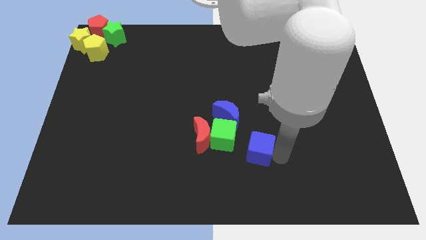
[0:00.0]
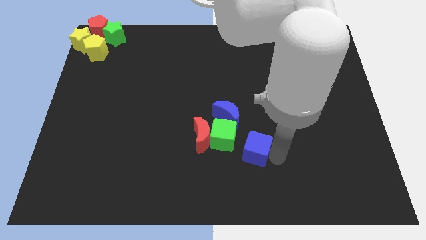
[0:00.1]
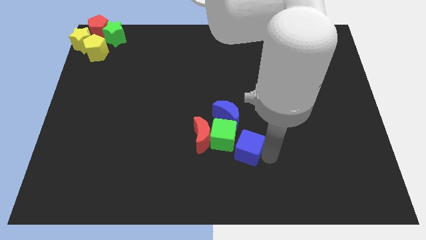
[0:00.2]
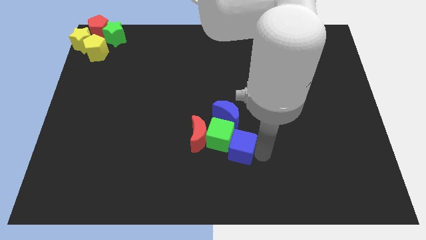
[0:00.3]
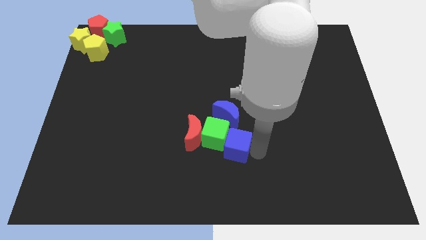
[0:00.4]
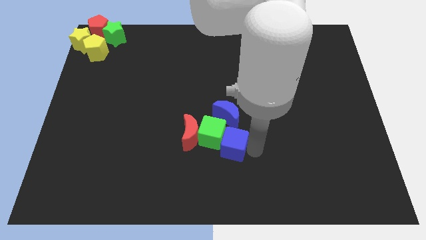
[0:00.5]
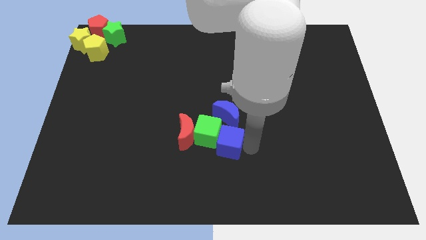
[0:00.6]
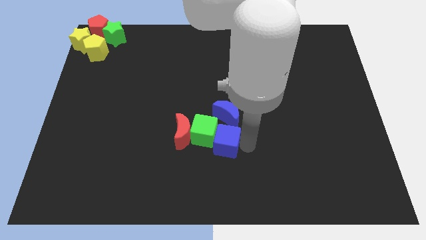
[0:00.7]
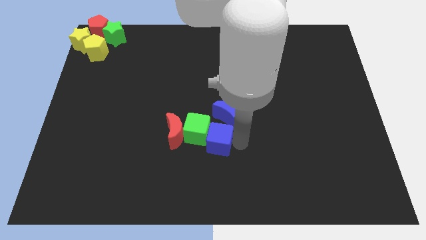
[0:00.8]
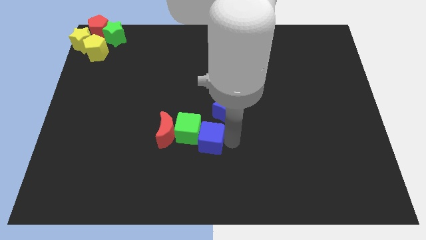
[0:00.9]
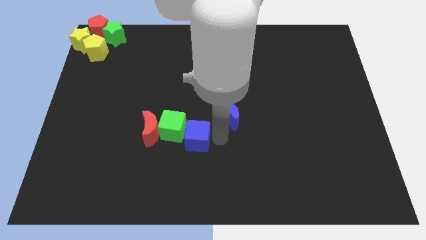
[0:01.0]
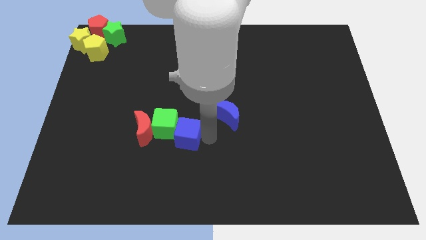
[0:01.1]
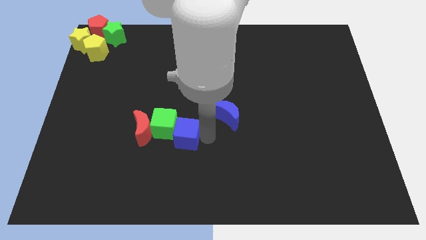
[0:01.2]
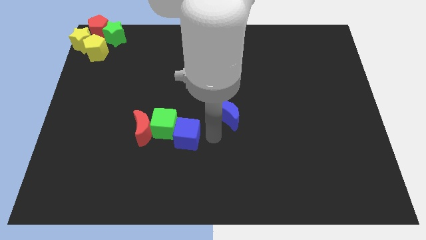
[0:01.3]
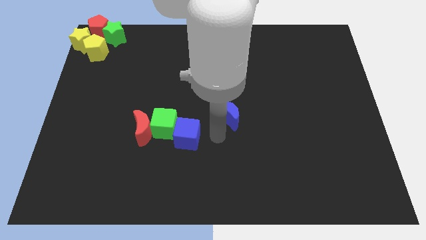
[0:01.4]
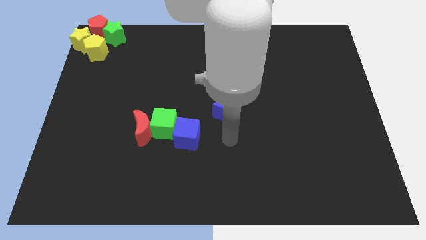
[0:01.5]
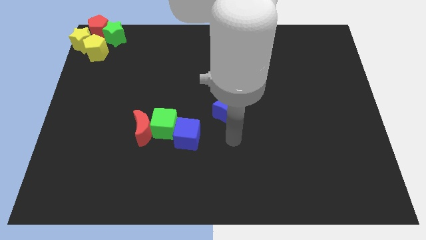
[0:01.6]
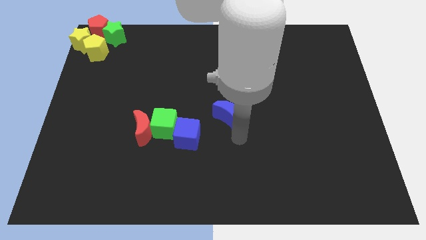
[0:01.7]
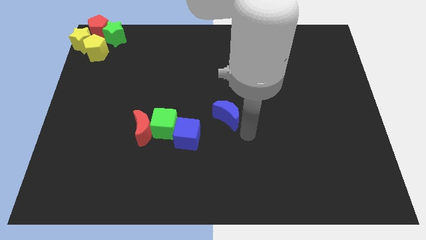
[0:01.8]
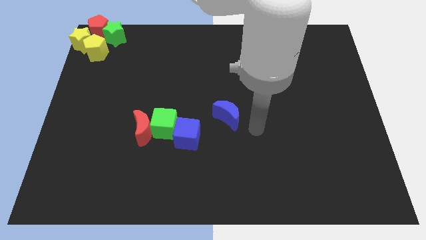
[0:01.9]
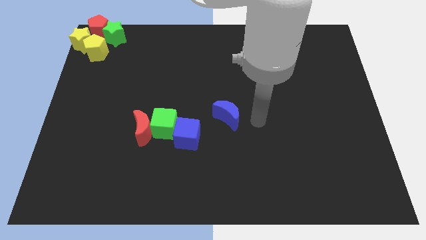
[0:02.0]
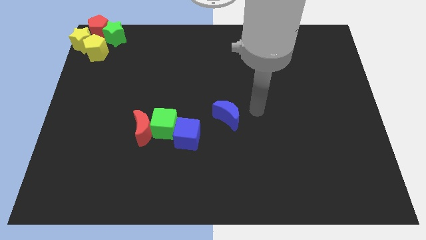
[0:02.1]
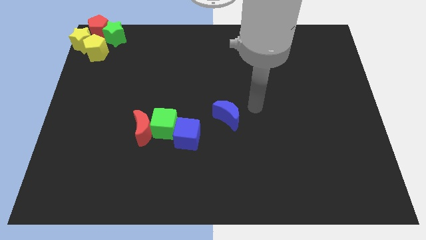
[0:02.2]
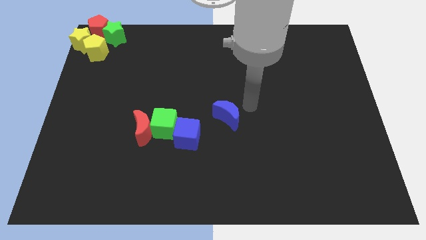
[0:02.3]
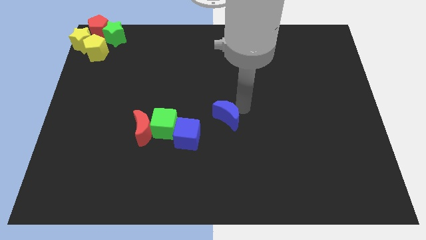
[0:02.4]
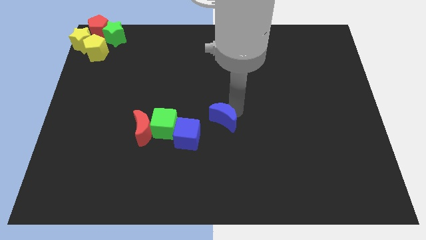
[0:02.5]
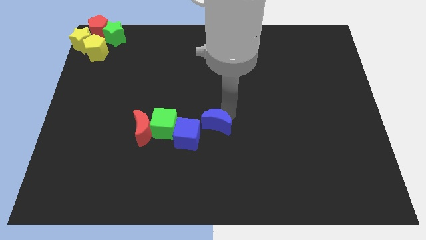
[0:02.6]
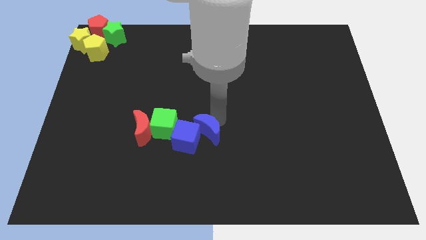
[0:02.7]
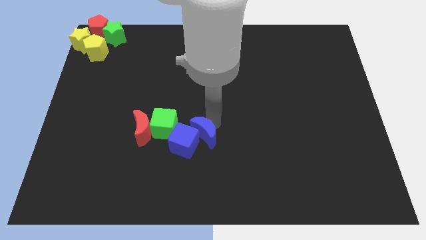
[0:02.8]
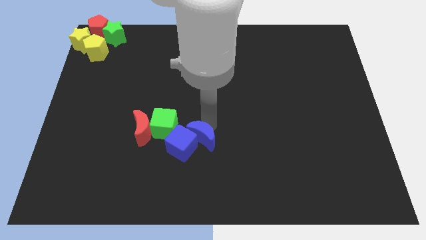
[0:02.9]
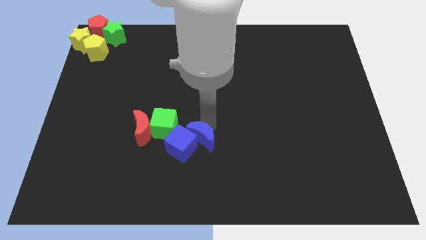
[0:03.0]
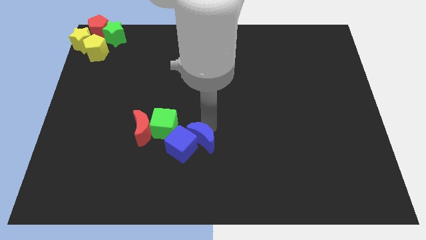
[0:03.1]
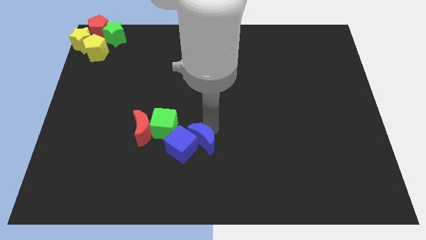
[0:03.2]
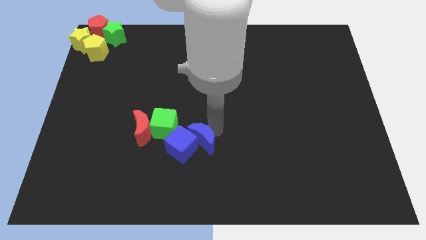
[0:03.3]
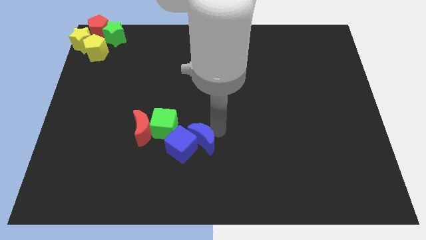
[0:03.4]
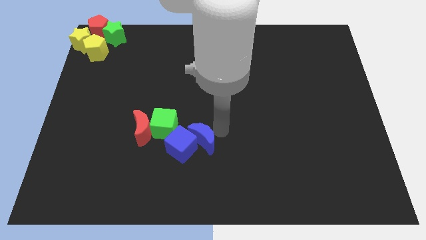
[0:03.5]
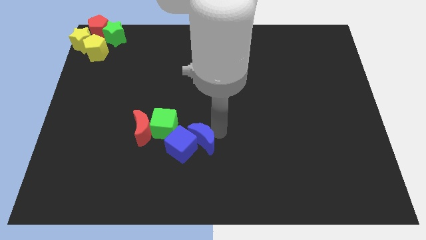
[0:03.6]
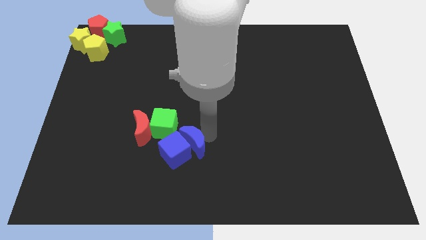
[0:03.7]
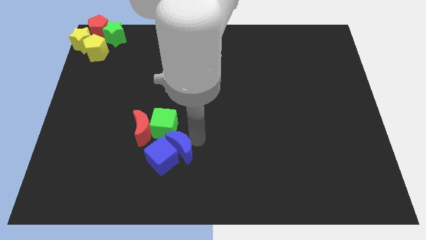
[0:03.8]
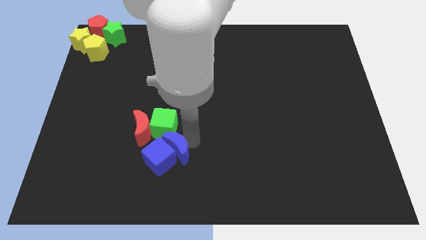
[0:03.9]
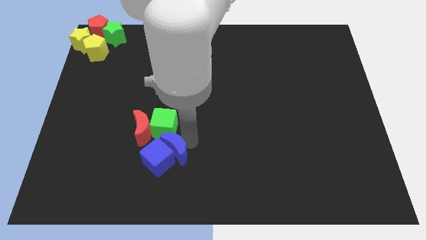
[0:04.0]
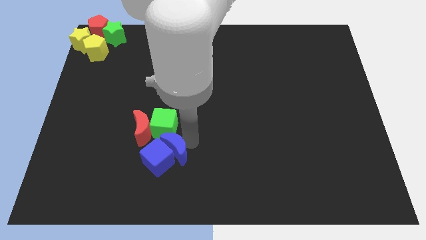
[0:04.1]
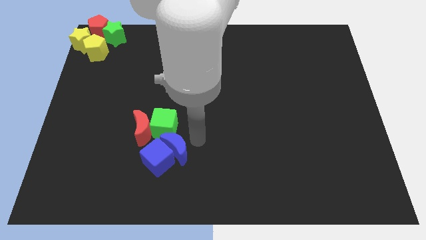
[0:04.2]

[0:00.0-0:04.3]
push the blue crescent along with the blue cube below to the green cube

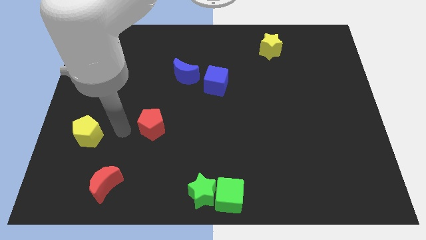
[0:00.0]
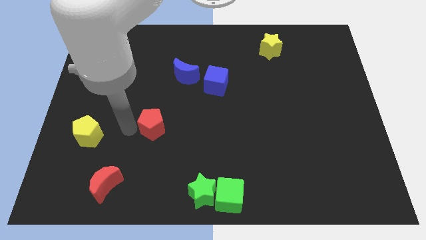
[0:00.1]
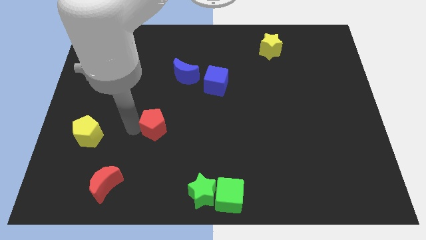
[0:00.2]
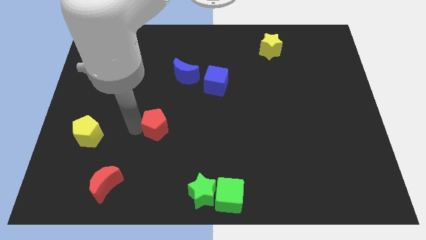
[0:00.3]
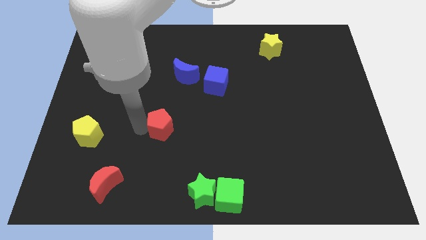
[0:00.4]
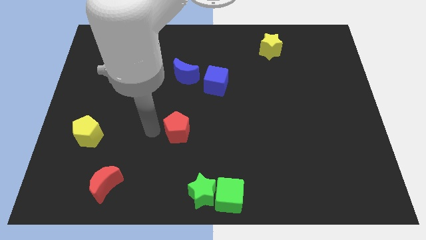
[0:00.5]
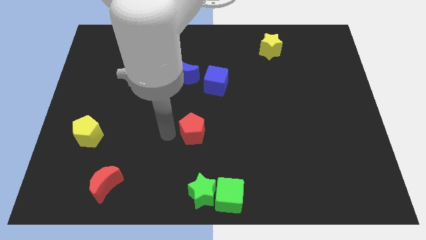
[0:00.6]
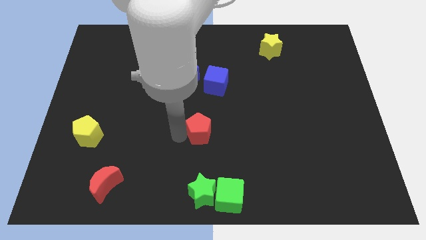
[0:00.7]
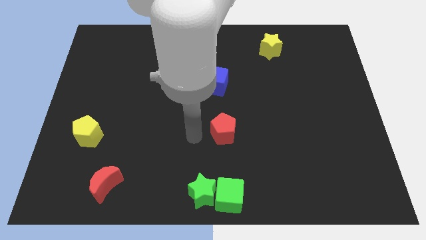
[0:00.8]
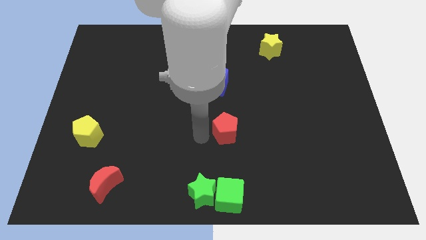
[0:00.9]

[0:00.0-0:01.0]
push the red pentagon to the right of the board

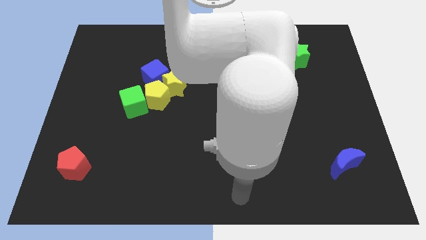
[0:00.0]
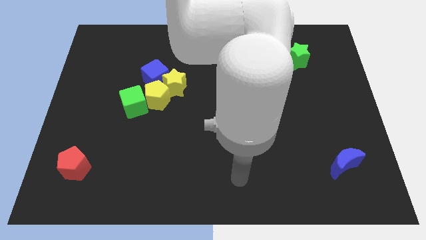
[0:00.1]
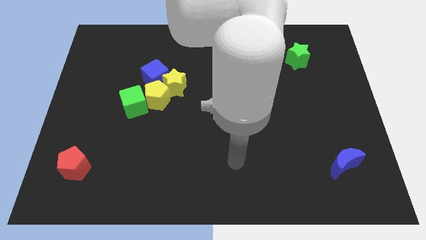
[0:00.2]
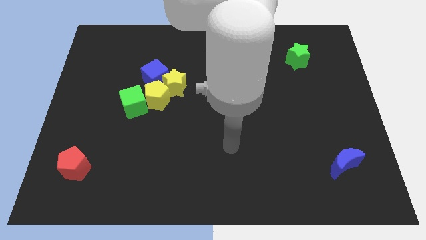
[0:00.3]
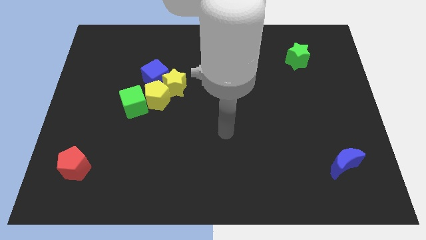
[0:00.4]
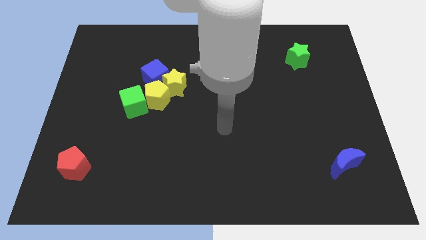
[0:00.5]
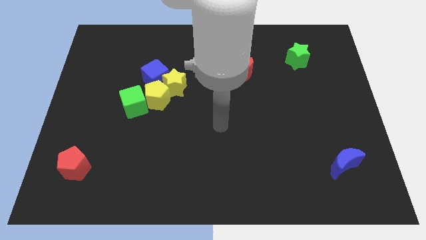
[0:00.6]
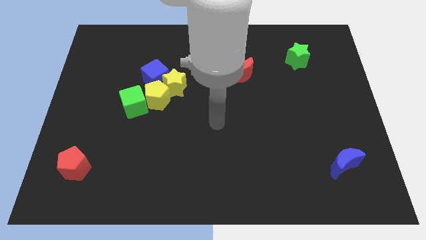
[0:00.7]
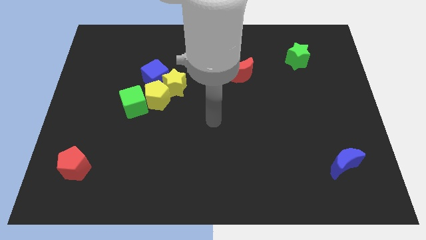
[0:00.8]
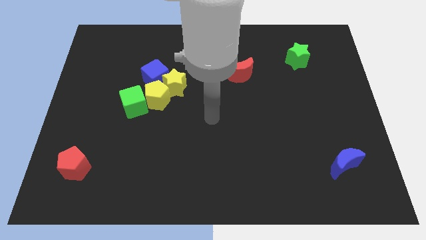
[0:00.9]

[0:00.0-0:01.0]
place your arm at the center of the board

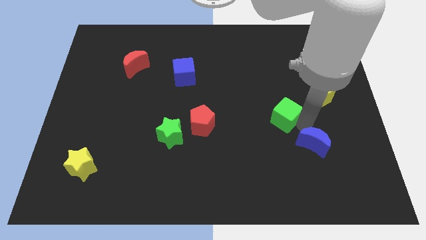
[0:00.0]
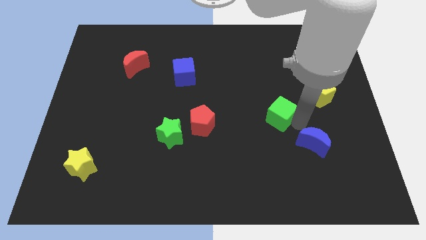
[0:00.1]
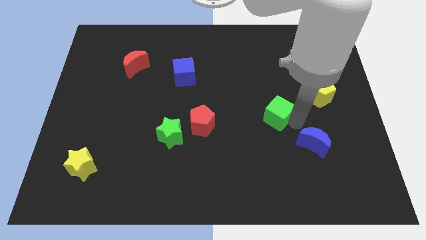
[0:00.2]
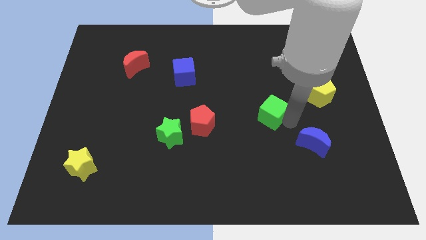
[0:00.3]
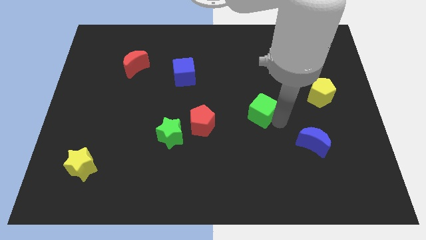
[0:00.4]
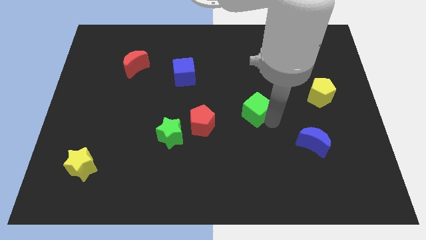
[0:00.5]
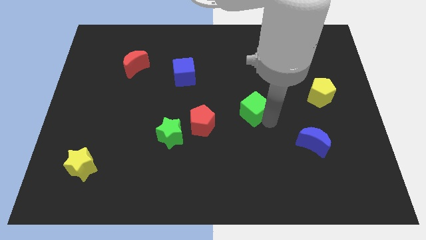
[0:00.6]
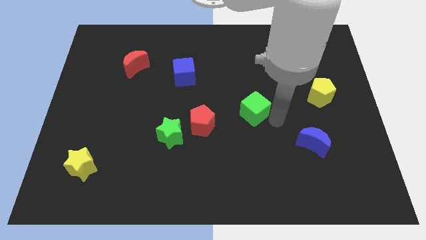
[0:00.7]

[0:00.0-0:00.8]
push the green cube towards left

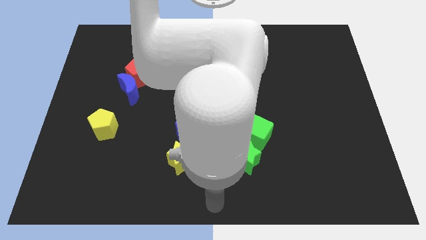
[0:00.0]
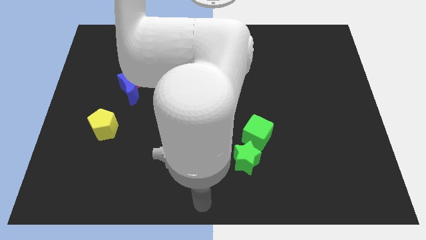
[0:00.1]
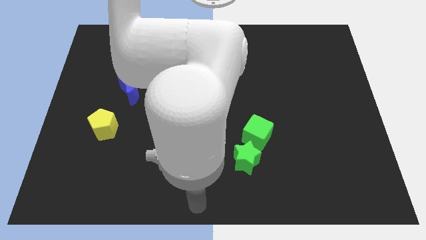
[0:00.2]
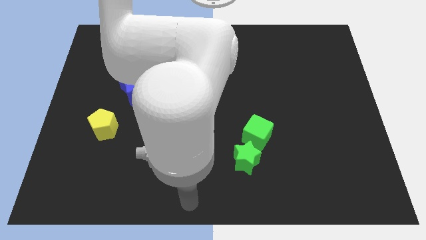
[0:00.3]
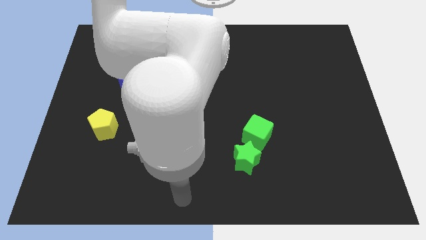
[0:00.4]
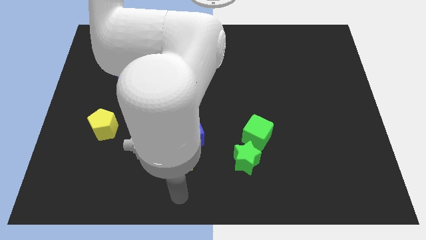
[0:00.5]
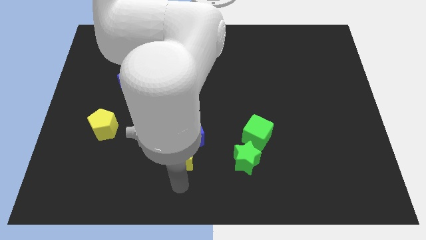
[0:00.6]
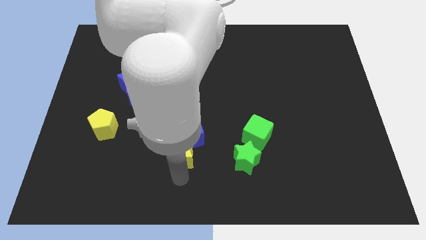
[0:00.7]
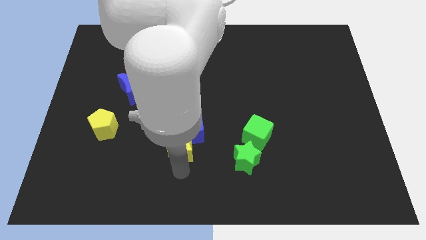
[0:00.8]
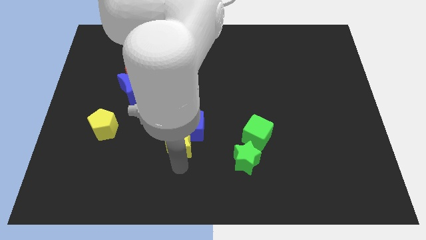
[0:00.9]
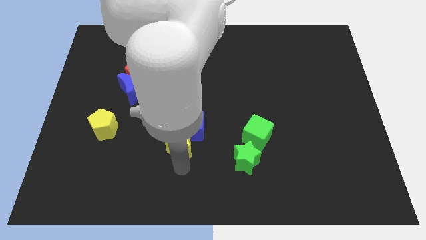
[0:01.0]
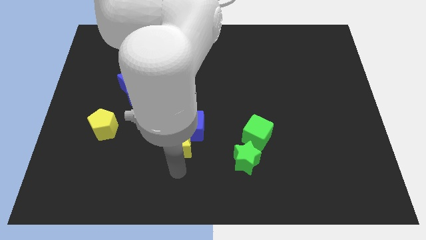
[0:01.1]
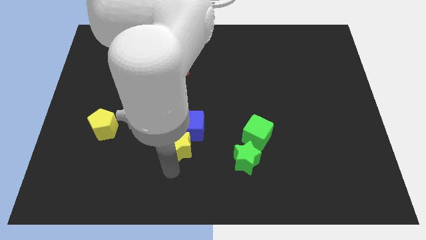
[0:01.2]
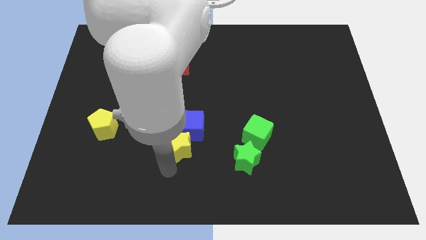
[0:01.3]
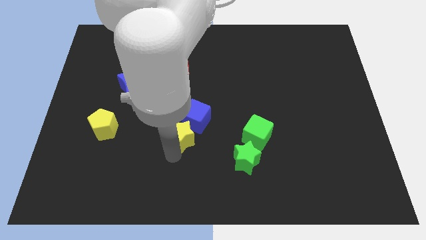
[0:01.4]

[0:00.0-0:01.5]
push the yellow star into the blue cube

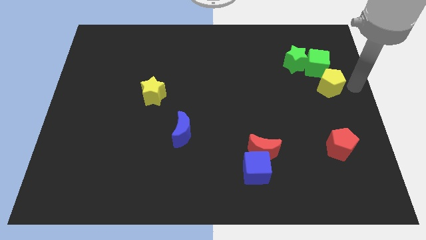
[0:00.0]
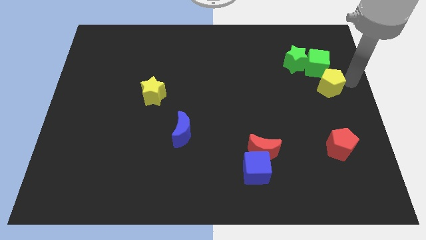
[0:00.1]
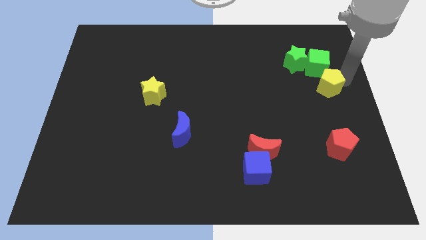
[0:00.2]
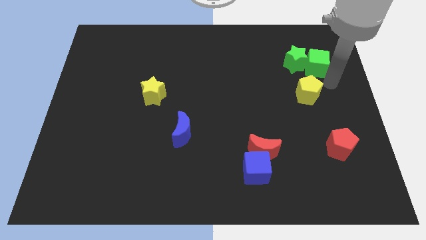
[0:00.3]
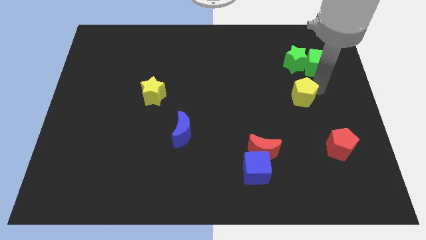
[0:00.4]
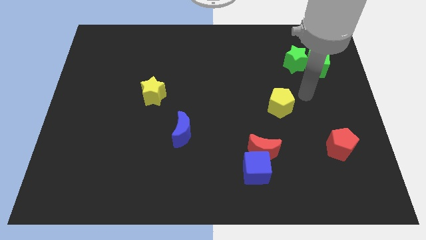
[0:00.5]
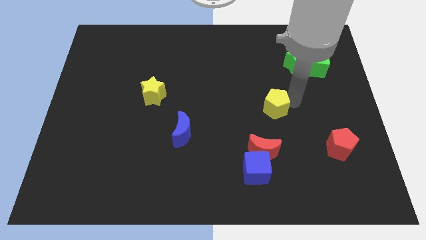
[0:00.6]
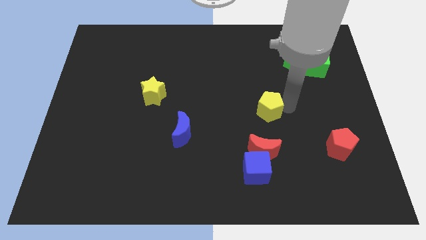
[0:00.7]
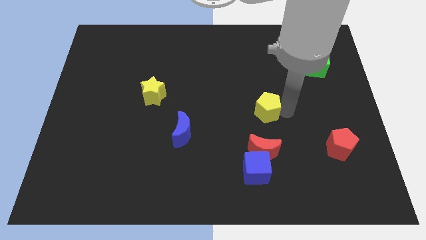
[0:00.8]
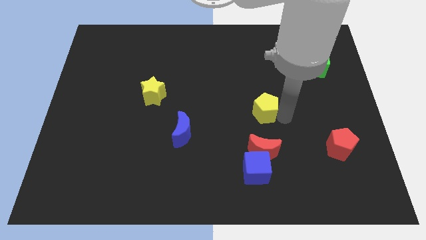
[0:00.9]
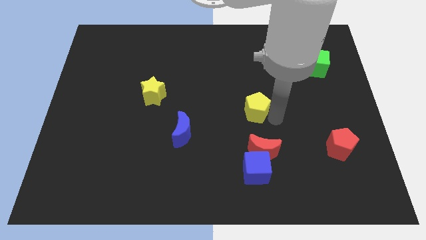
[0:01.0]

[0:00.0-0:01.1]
push yellow pentagon downwards
